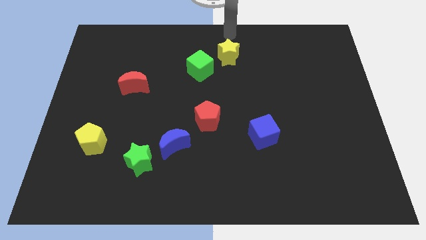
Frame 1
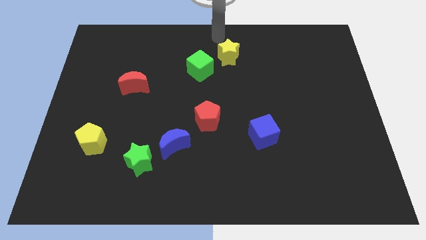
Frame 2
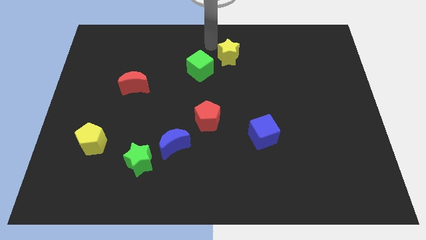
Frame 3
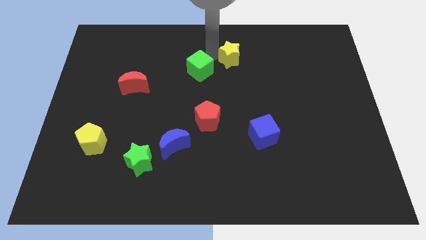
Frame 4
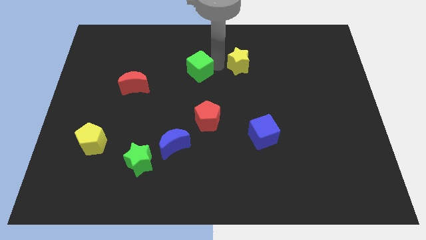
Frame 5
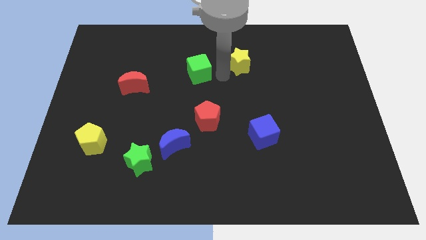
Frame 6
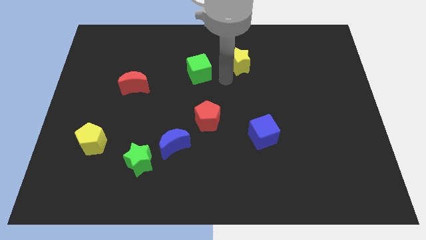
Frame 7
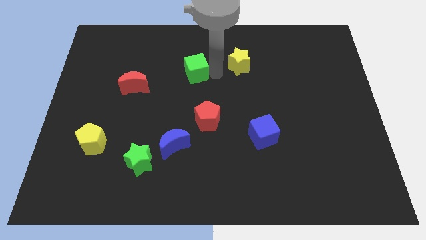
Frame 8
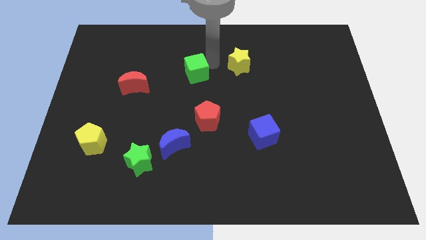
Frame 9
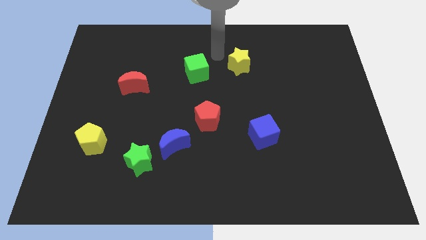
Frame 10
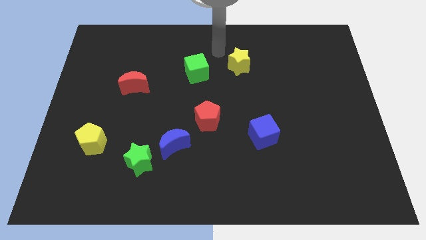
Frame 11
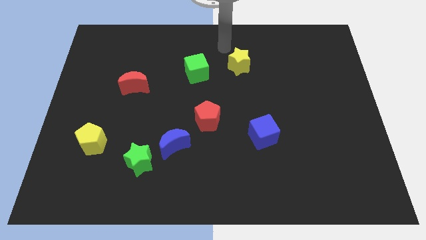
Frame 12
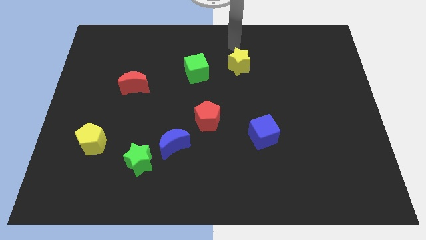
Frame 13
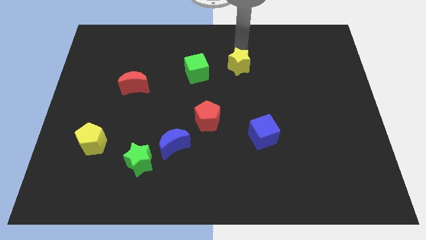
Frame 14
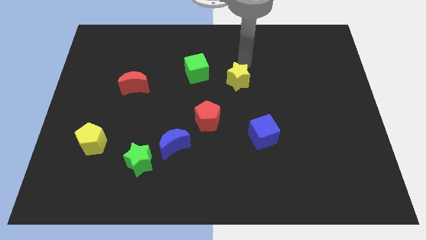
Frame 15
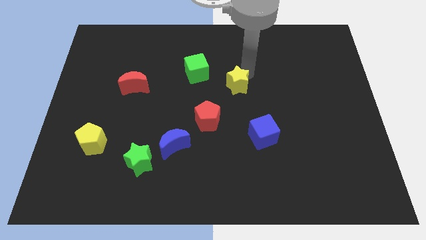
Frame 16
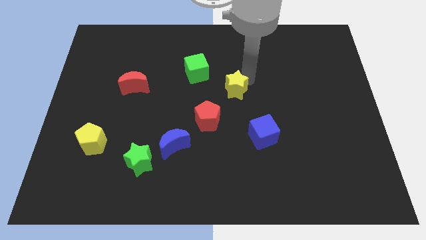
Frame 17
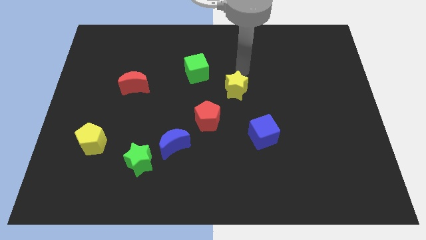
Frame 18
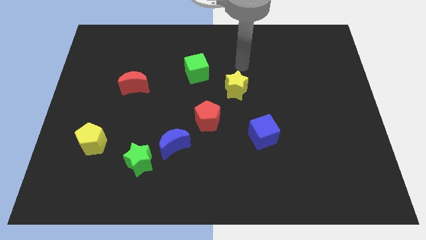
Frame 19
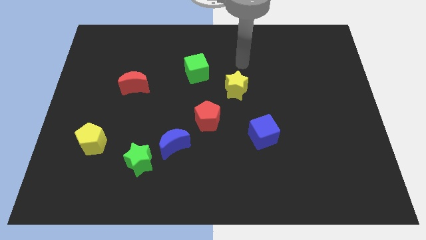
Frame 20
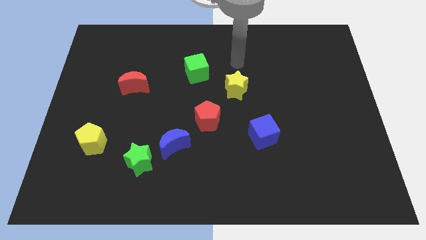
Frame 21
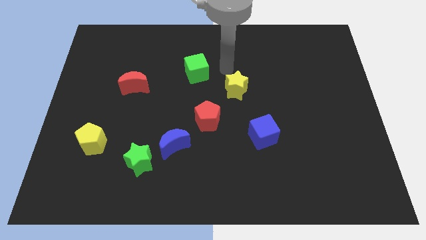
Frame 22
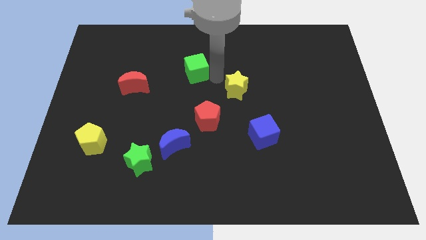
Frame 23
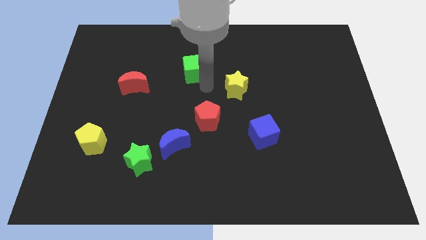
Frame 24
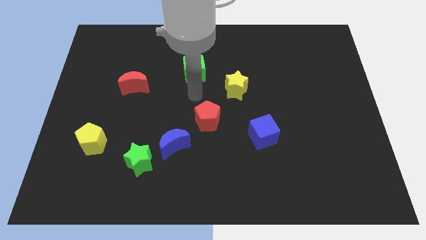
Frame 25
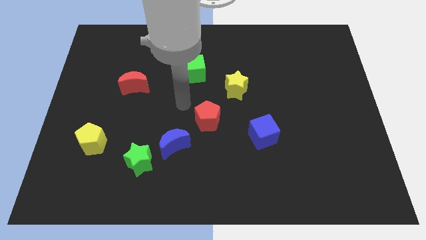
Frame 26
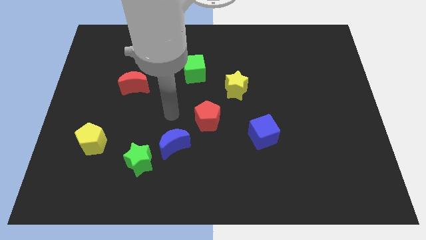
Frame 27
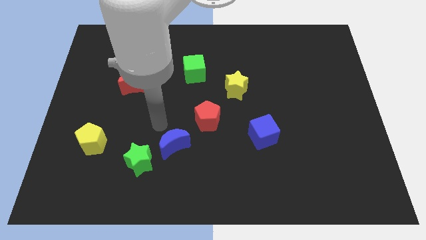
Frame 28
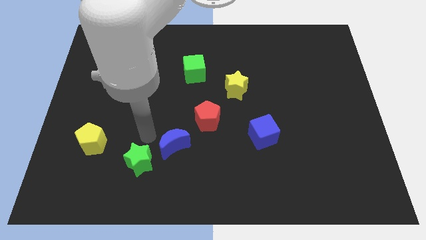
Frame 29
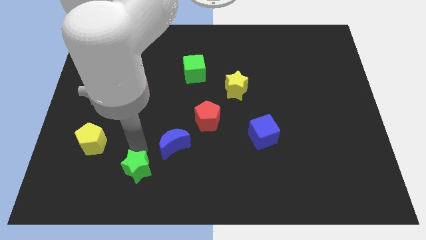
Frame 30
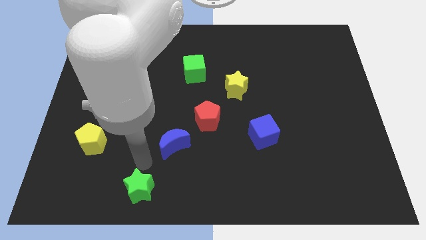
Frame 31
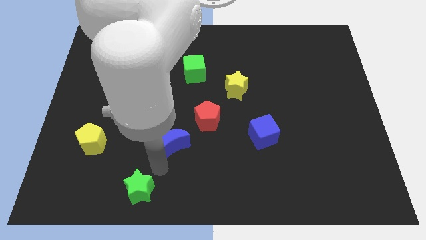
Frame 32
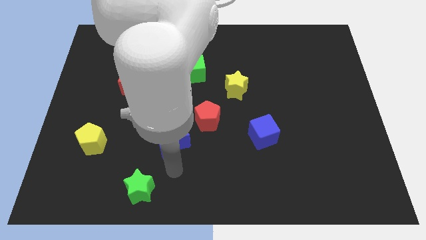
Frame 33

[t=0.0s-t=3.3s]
push green star towards center

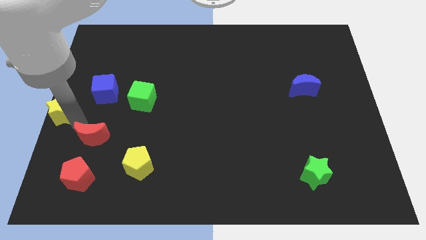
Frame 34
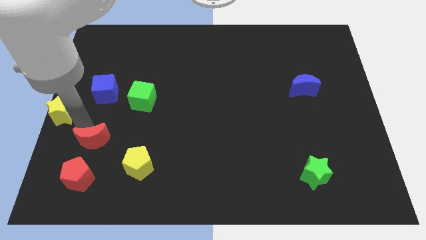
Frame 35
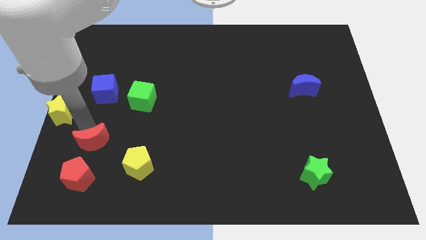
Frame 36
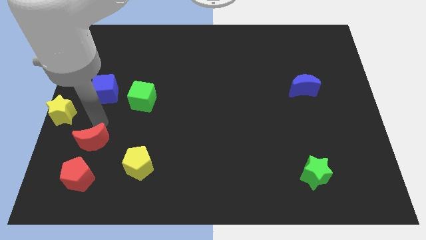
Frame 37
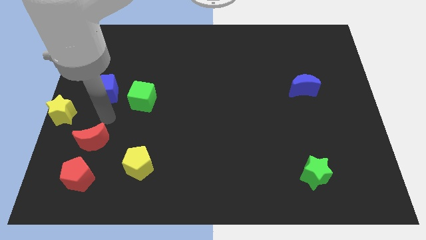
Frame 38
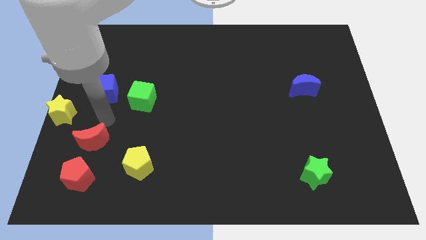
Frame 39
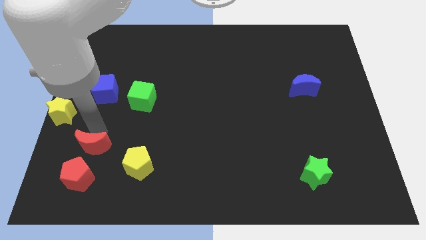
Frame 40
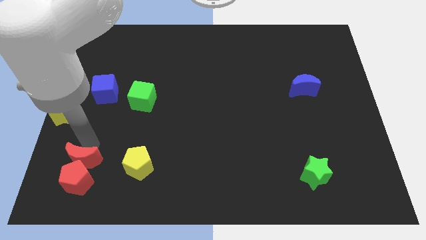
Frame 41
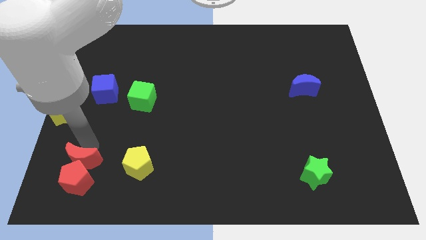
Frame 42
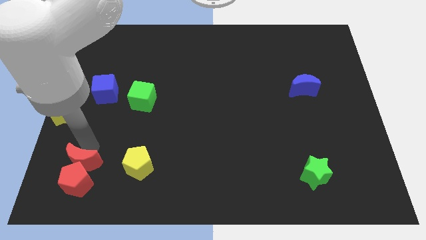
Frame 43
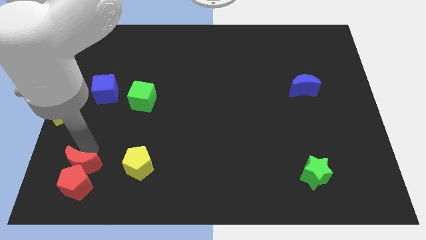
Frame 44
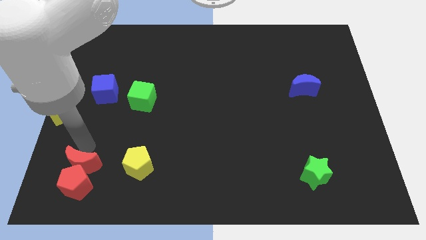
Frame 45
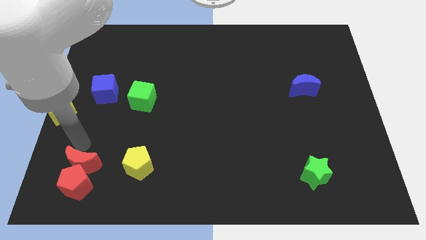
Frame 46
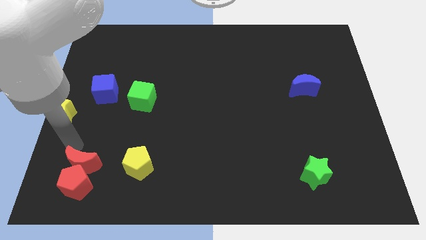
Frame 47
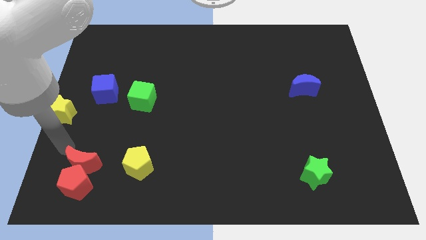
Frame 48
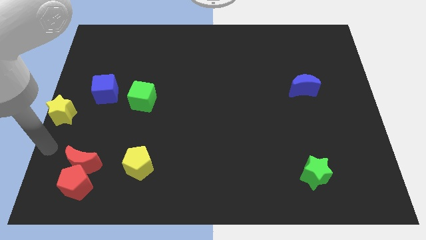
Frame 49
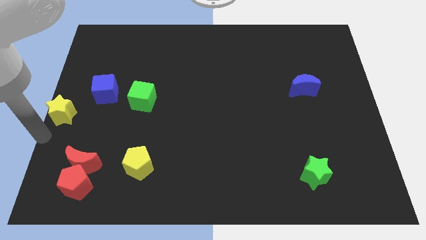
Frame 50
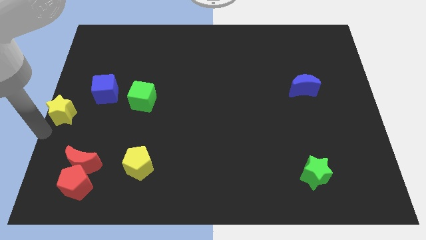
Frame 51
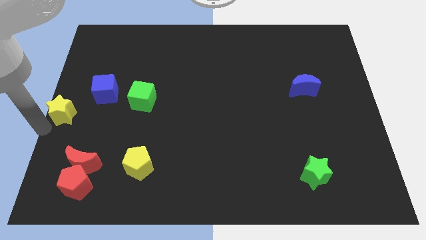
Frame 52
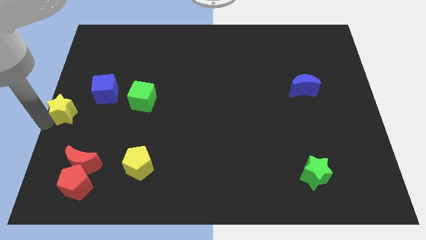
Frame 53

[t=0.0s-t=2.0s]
move the red crescent to the top of the red pentagon

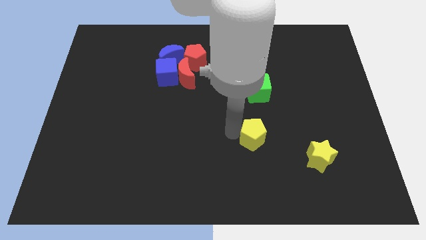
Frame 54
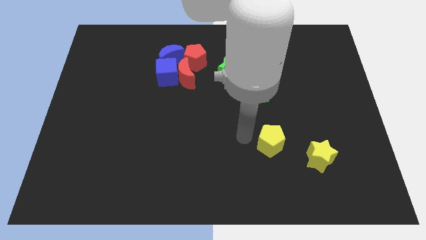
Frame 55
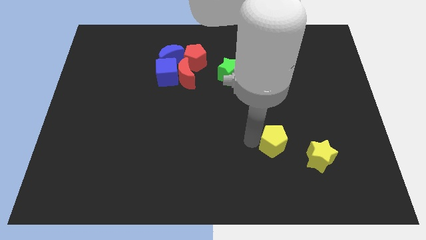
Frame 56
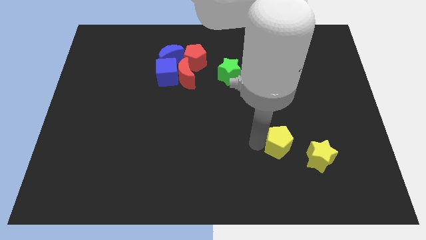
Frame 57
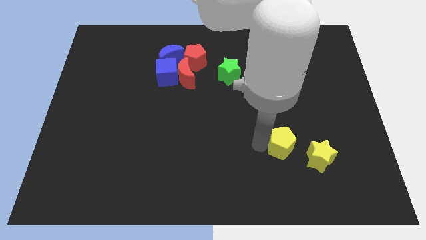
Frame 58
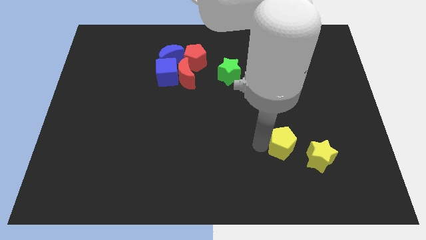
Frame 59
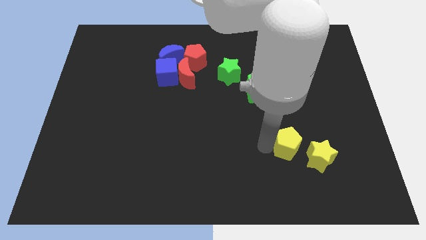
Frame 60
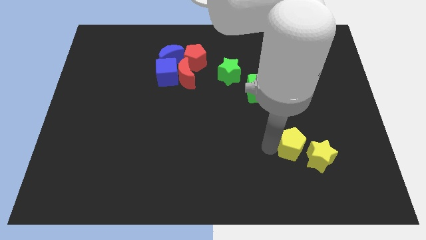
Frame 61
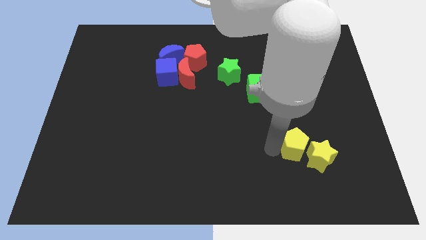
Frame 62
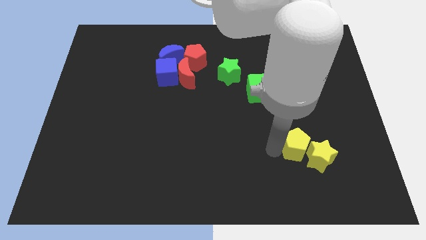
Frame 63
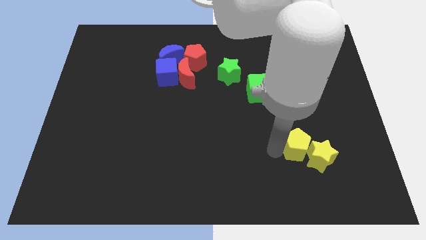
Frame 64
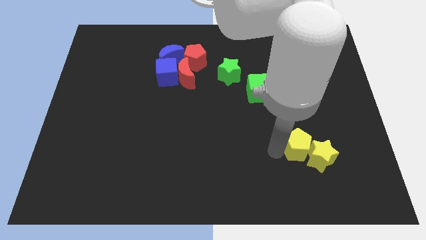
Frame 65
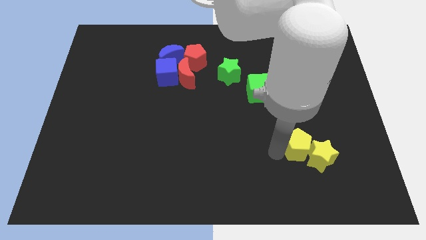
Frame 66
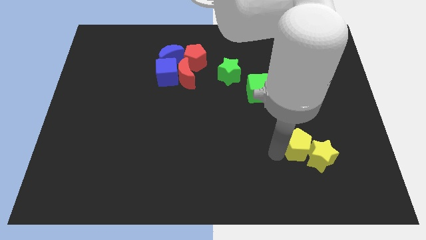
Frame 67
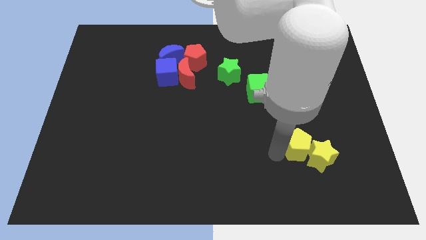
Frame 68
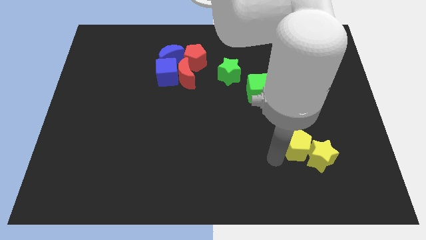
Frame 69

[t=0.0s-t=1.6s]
push the yellow pentagon into the yellow star

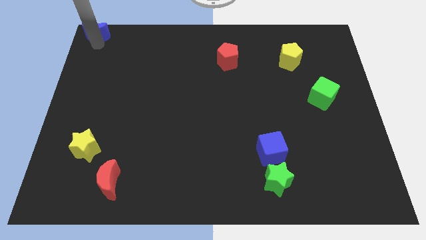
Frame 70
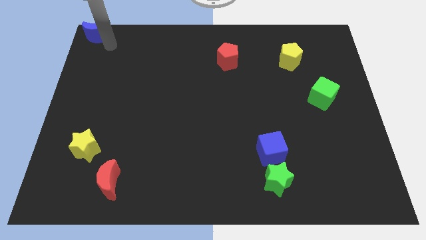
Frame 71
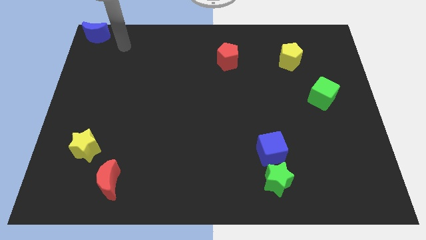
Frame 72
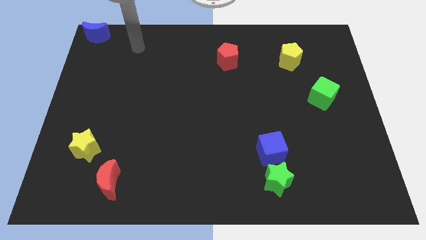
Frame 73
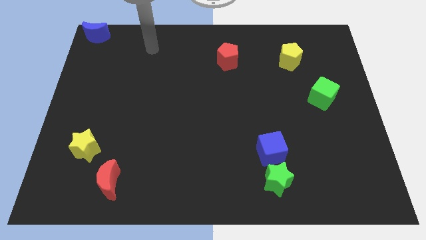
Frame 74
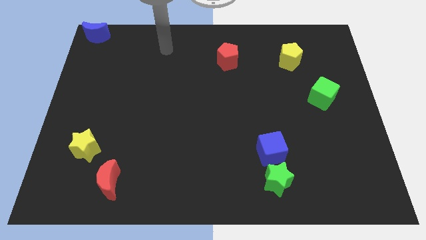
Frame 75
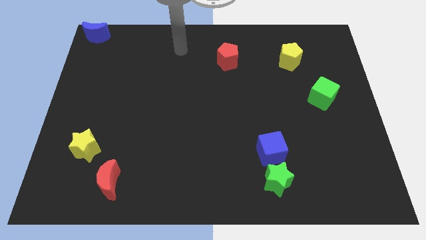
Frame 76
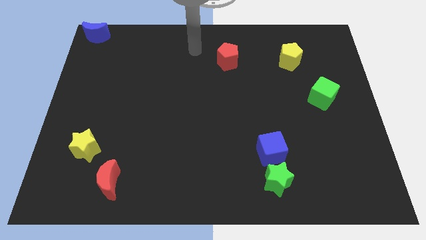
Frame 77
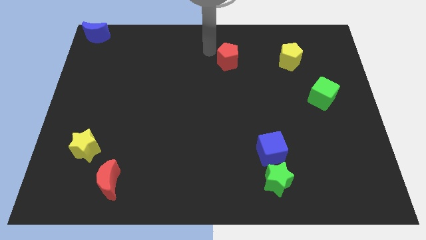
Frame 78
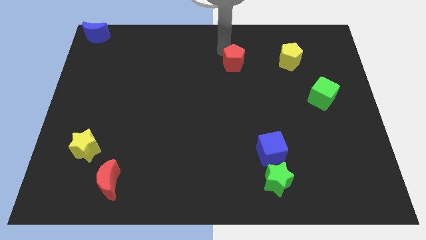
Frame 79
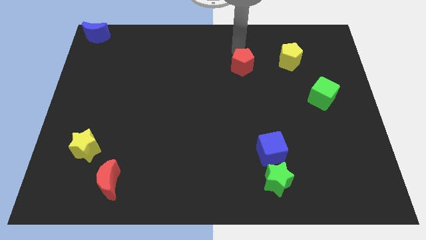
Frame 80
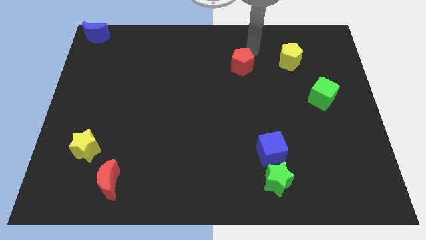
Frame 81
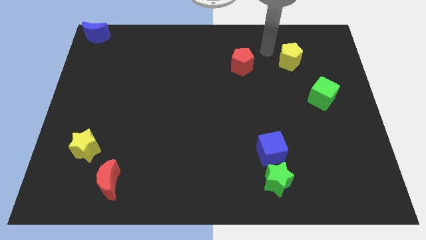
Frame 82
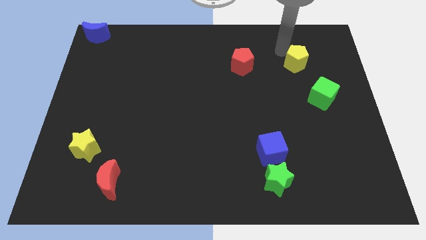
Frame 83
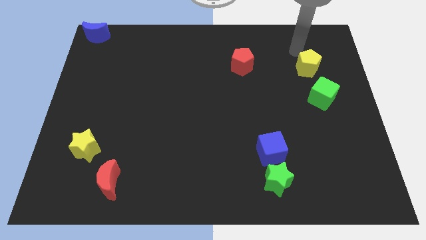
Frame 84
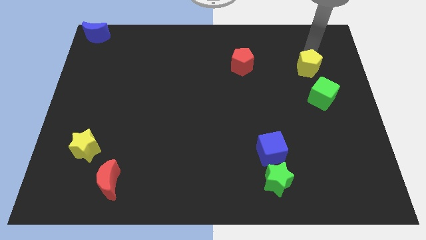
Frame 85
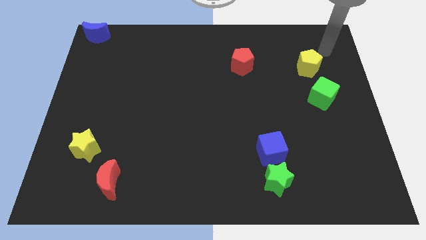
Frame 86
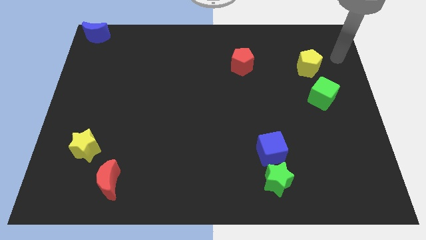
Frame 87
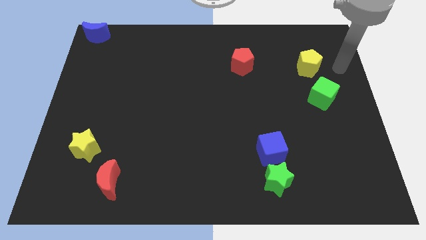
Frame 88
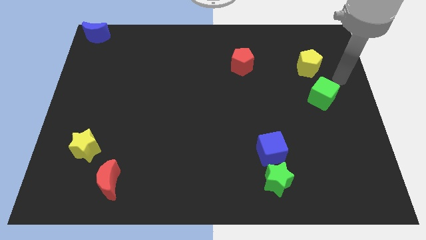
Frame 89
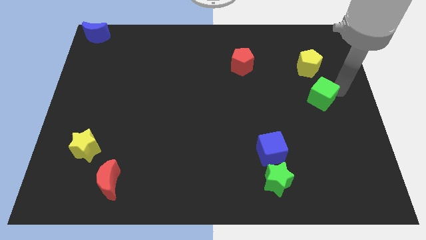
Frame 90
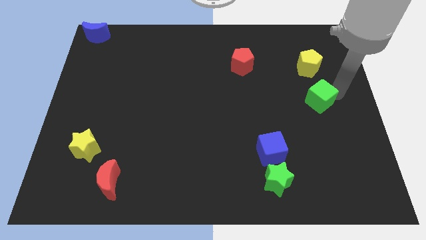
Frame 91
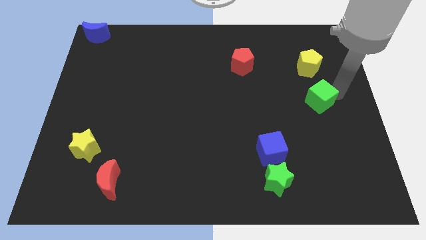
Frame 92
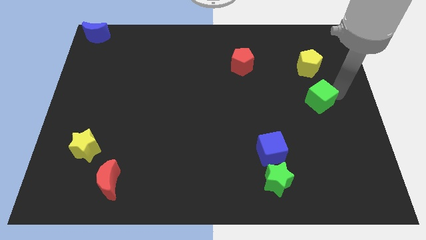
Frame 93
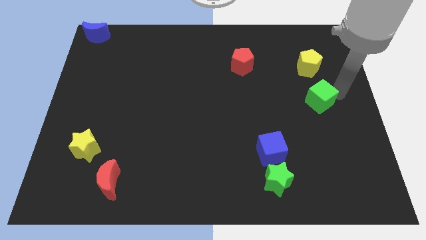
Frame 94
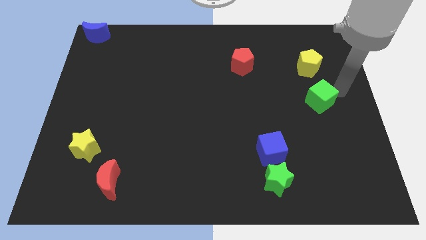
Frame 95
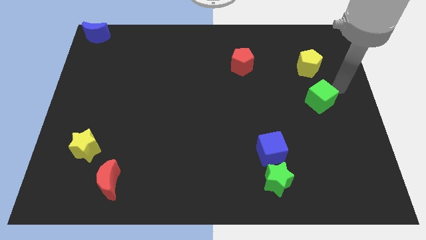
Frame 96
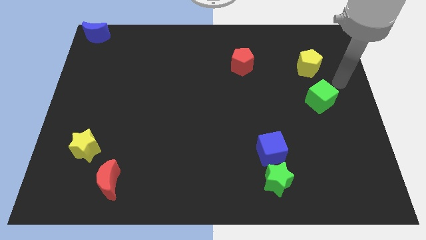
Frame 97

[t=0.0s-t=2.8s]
move your arm away from the blue moon
